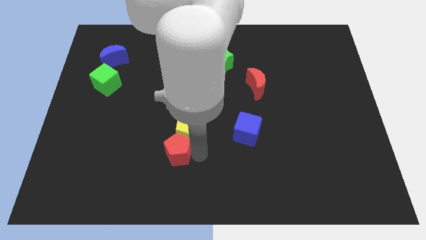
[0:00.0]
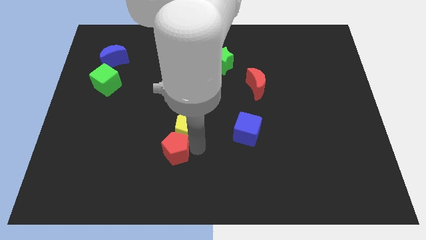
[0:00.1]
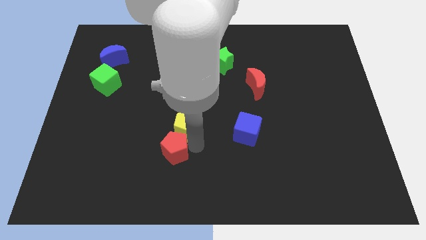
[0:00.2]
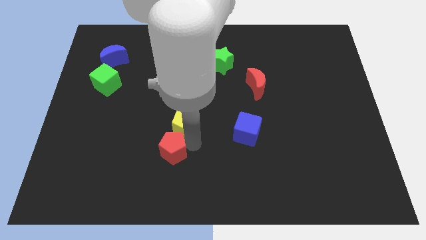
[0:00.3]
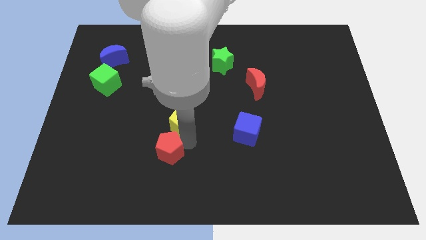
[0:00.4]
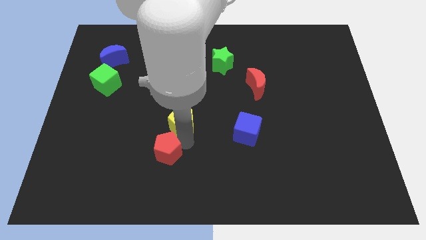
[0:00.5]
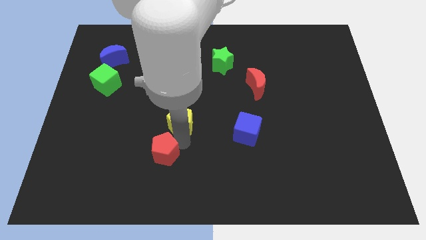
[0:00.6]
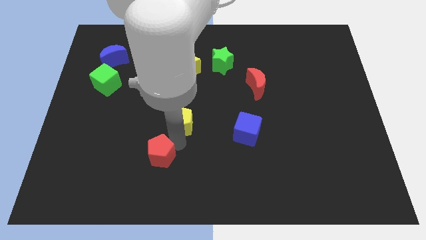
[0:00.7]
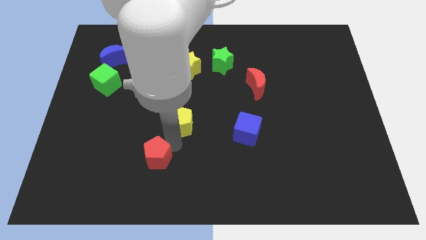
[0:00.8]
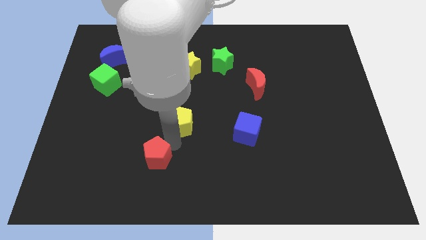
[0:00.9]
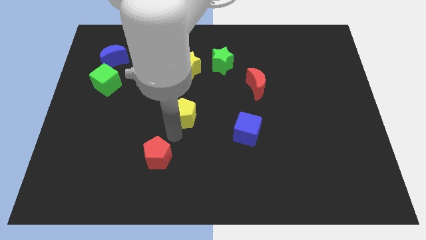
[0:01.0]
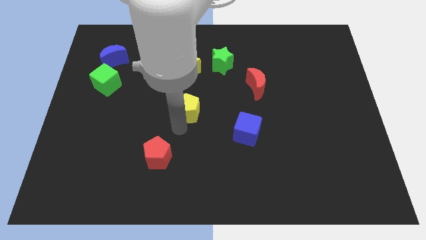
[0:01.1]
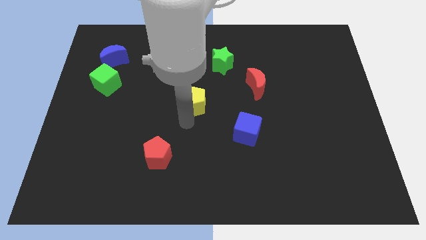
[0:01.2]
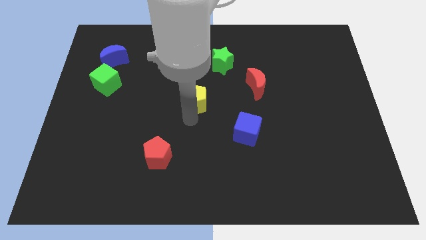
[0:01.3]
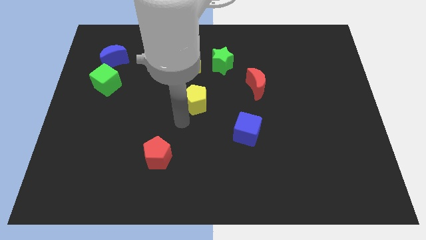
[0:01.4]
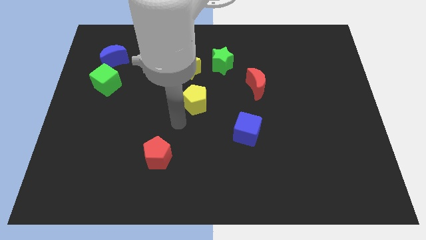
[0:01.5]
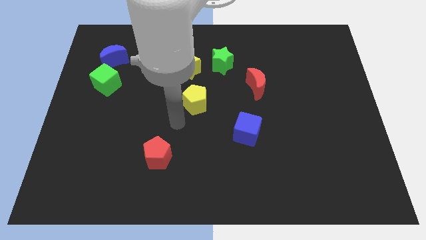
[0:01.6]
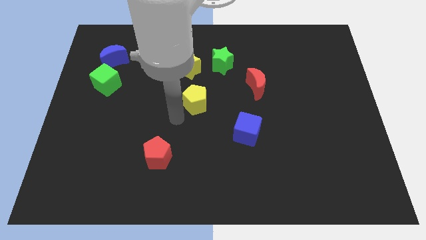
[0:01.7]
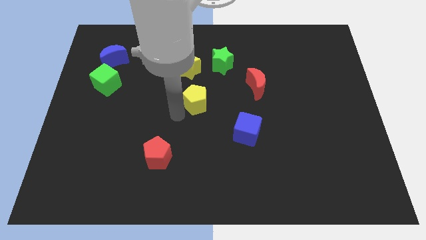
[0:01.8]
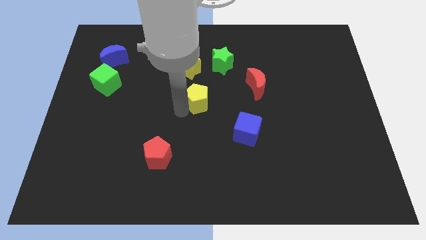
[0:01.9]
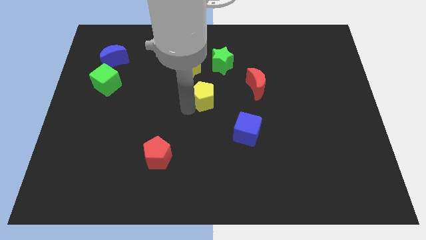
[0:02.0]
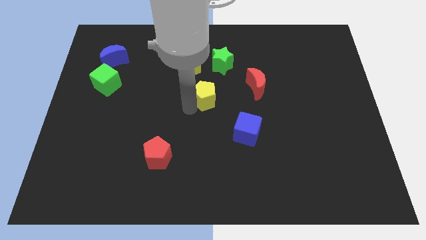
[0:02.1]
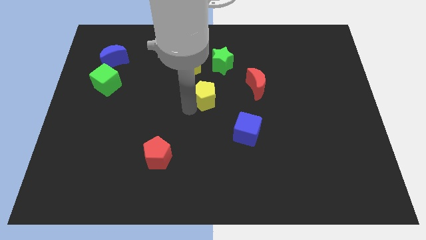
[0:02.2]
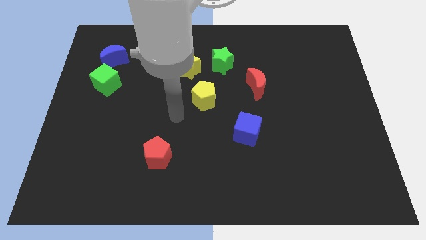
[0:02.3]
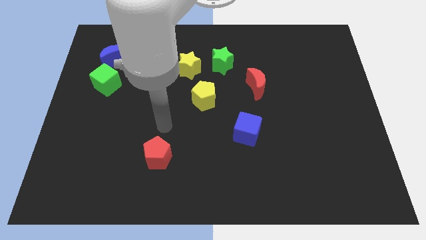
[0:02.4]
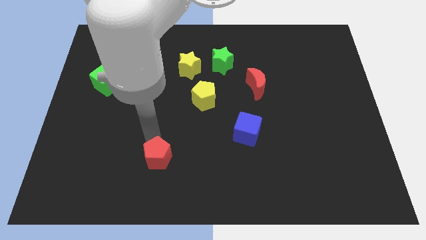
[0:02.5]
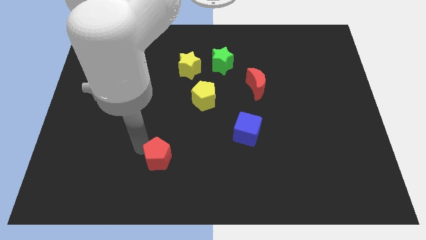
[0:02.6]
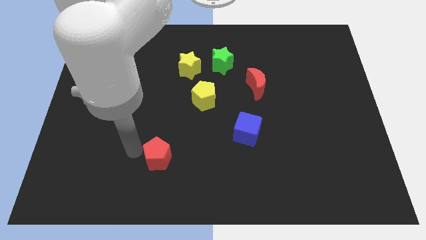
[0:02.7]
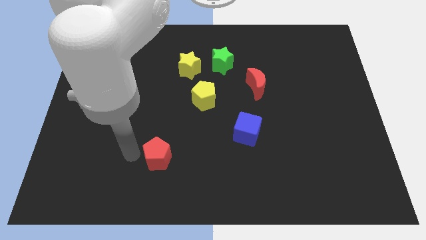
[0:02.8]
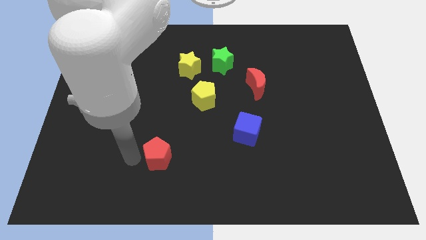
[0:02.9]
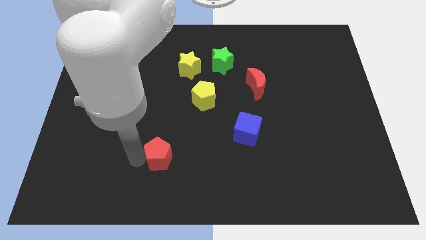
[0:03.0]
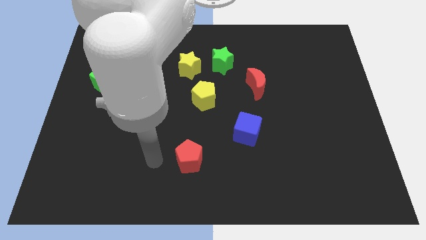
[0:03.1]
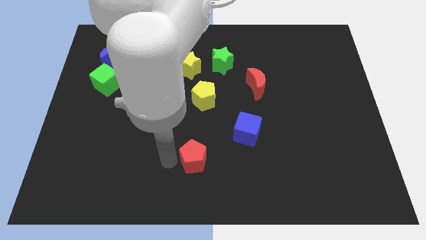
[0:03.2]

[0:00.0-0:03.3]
separate the red pentagon from yellow pentagon

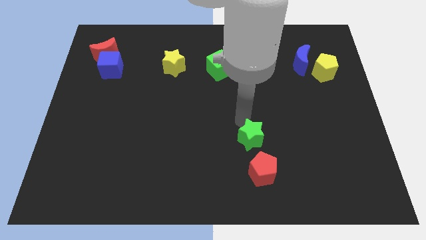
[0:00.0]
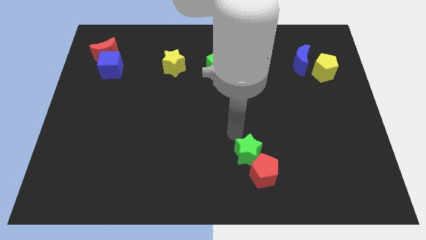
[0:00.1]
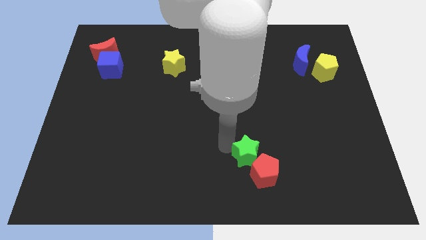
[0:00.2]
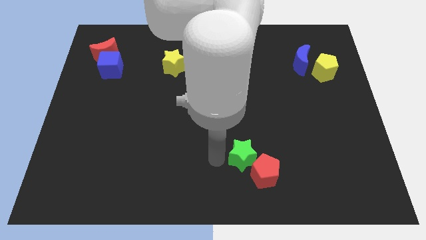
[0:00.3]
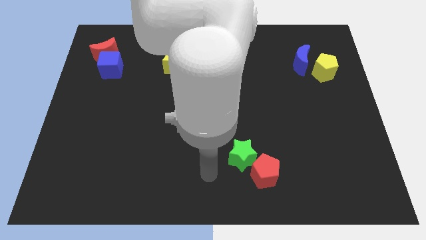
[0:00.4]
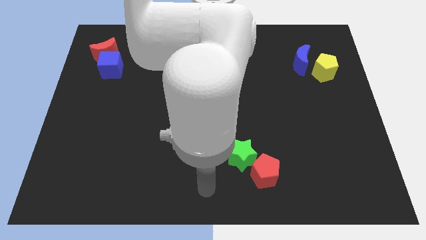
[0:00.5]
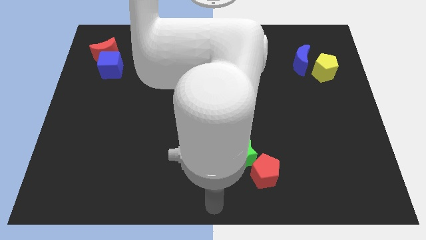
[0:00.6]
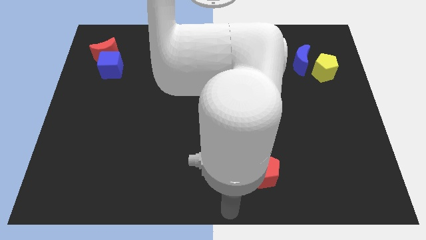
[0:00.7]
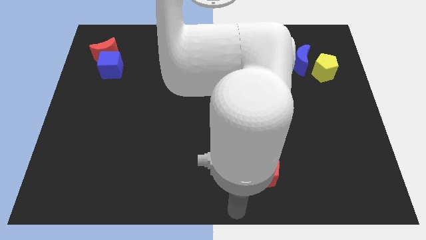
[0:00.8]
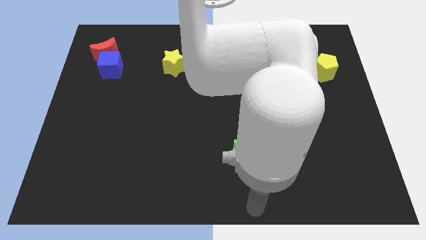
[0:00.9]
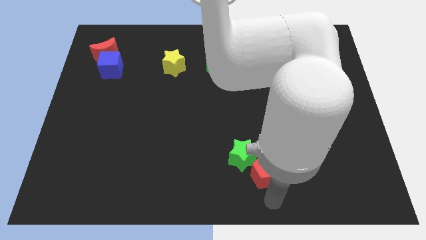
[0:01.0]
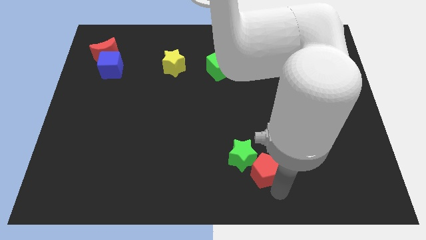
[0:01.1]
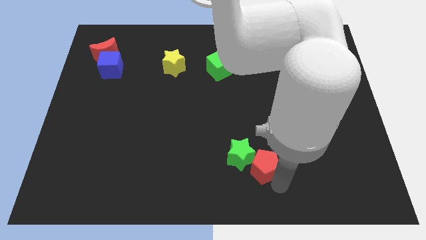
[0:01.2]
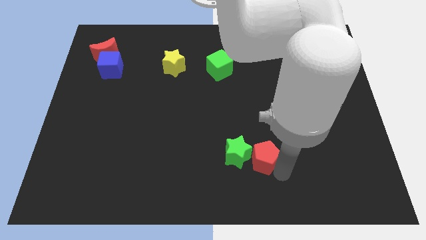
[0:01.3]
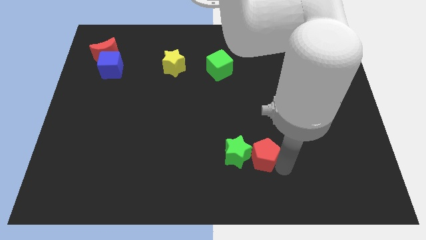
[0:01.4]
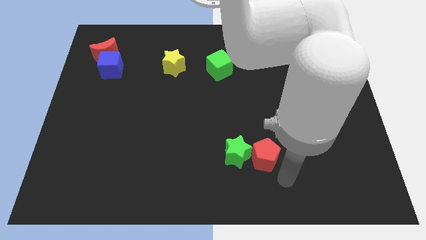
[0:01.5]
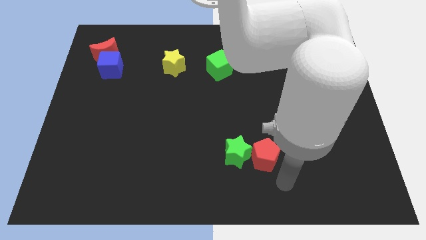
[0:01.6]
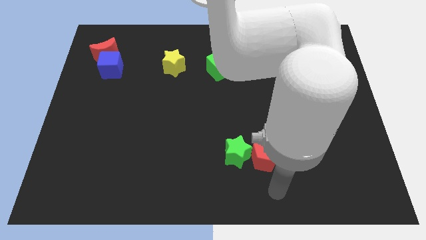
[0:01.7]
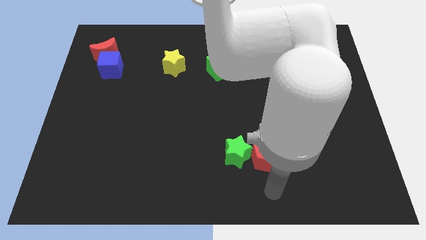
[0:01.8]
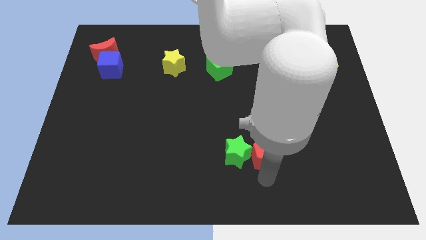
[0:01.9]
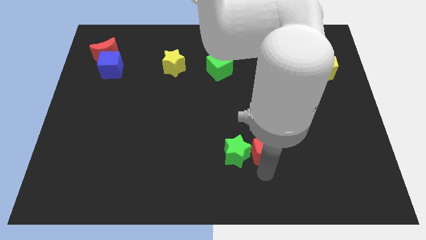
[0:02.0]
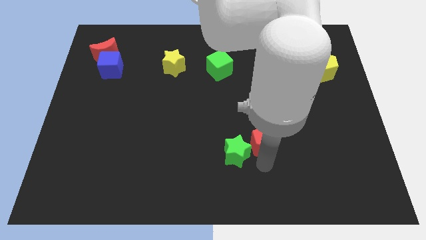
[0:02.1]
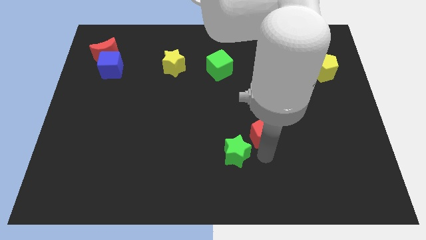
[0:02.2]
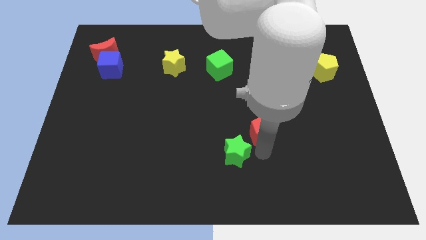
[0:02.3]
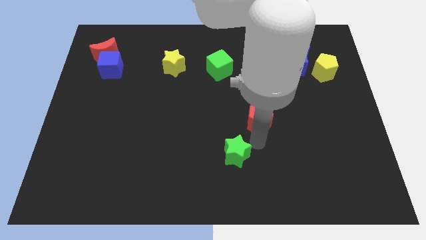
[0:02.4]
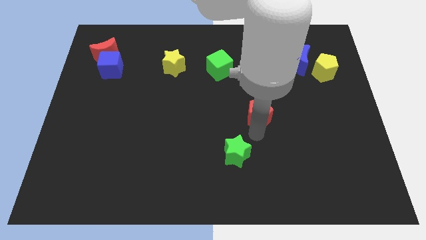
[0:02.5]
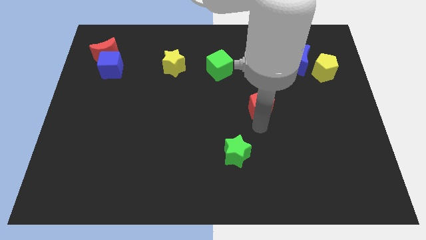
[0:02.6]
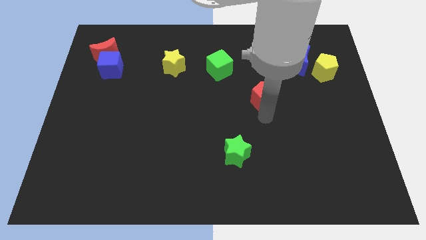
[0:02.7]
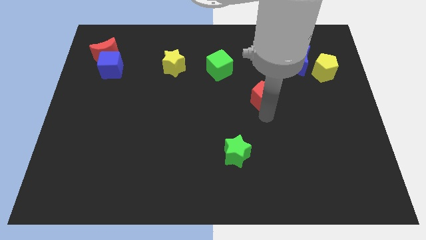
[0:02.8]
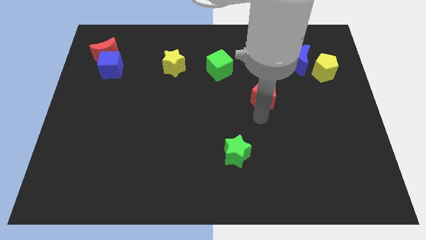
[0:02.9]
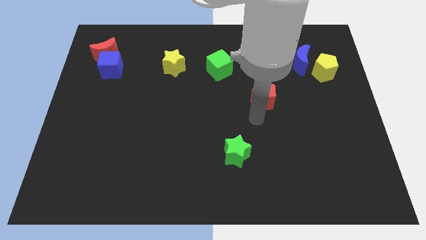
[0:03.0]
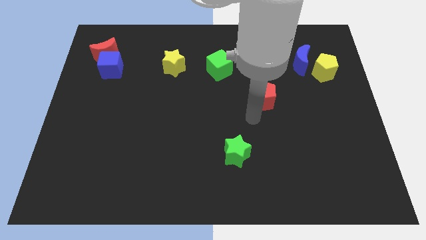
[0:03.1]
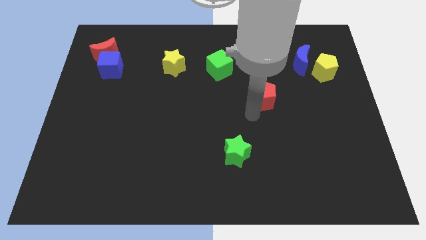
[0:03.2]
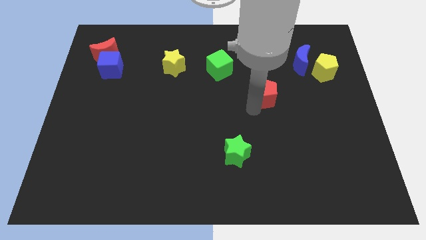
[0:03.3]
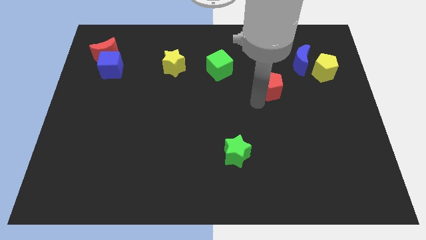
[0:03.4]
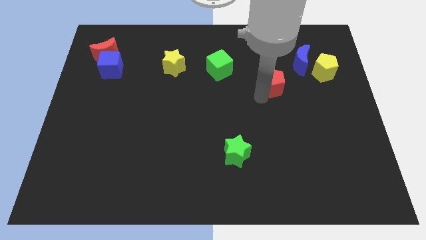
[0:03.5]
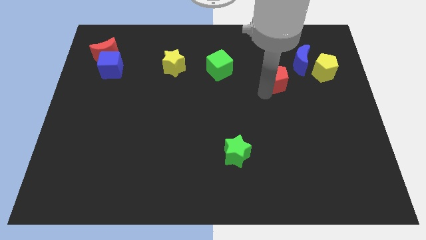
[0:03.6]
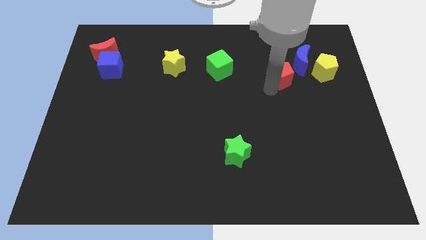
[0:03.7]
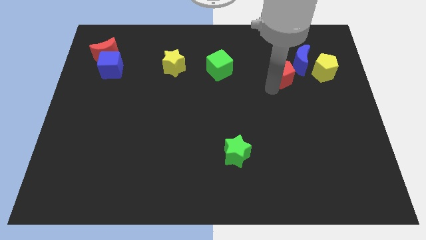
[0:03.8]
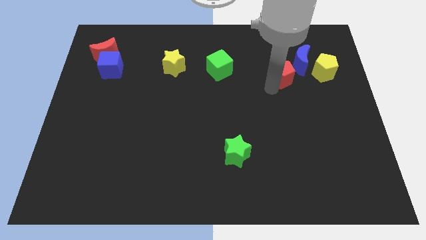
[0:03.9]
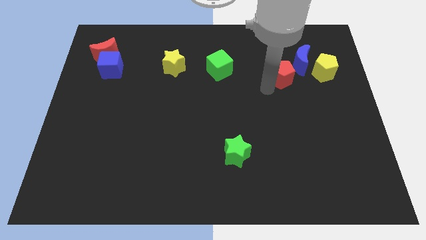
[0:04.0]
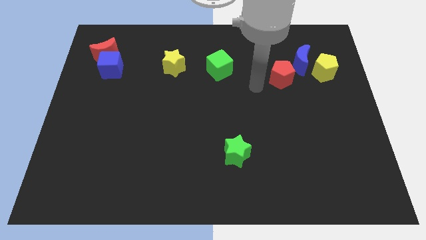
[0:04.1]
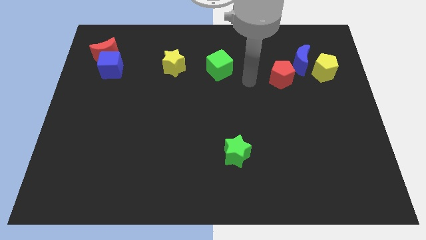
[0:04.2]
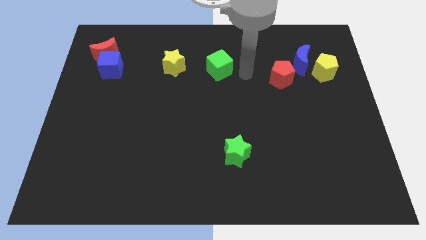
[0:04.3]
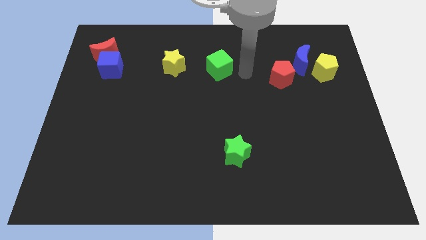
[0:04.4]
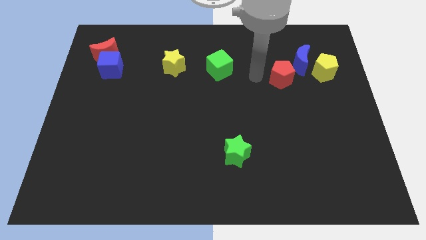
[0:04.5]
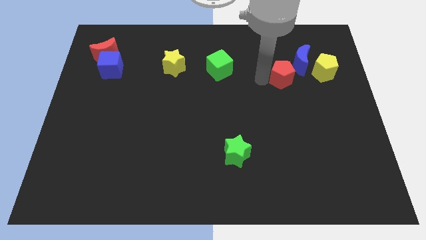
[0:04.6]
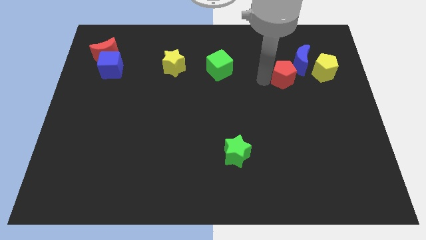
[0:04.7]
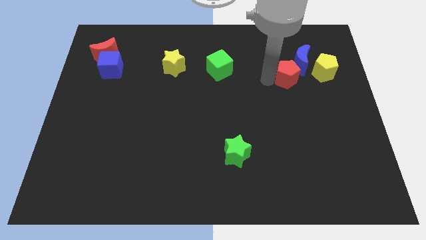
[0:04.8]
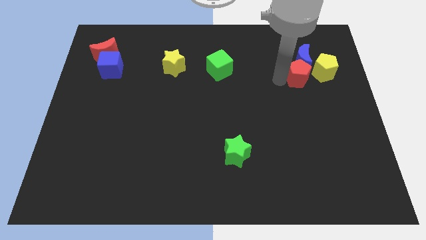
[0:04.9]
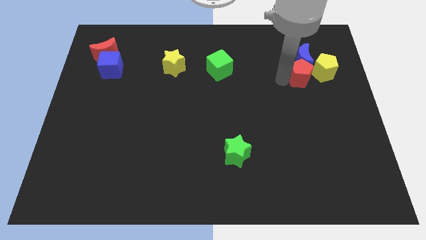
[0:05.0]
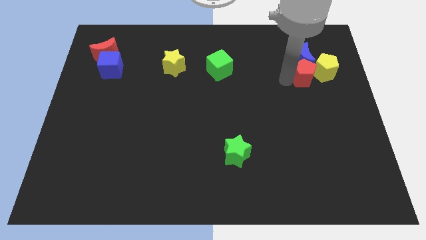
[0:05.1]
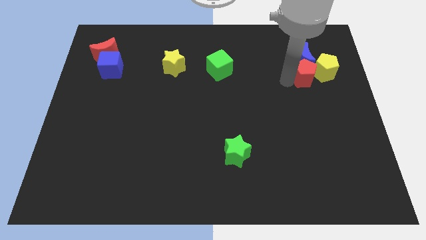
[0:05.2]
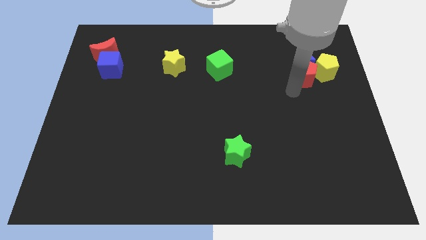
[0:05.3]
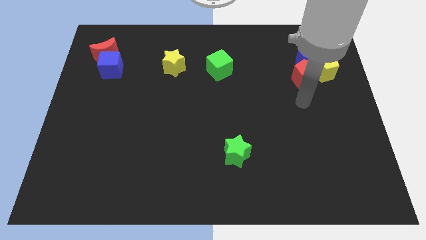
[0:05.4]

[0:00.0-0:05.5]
move the red pentagon below blue moon
